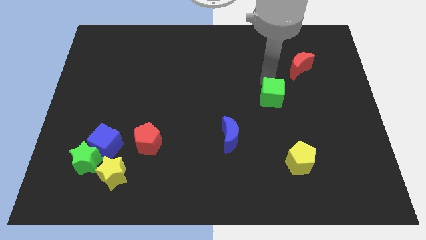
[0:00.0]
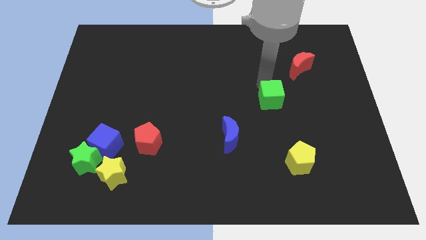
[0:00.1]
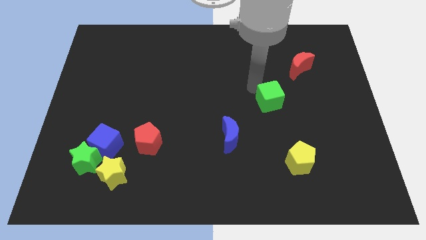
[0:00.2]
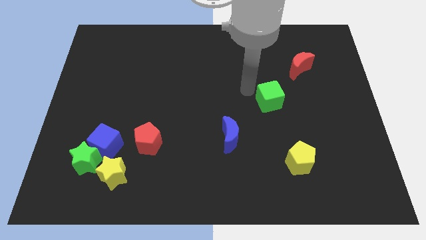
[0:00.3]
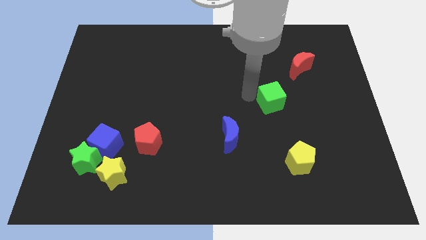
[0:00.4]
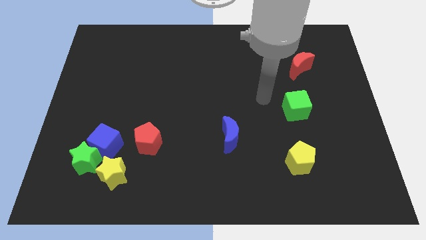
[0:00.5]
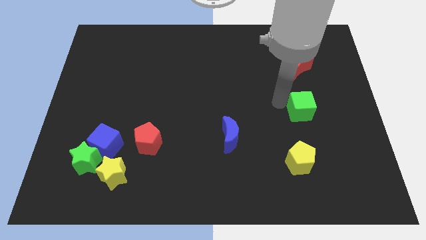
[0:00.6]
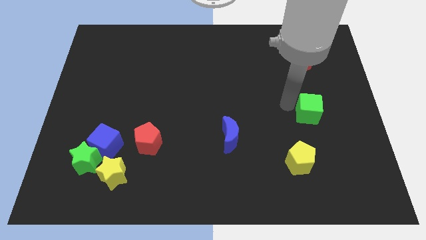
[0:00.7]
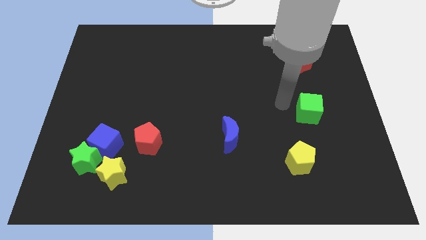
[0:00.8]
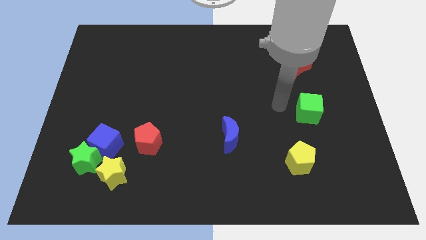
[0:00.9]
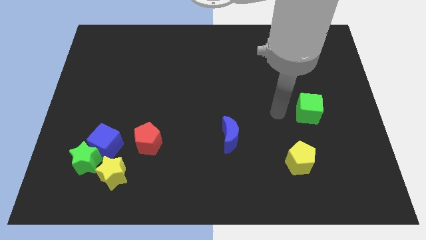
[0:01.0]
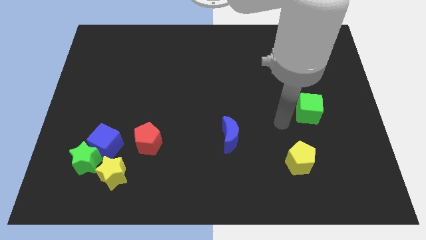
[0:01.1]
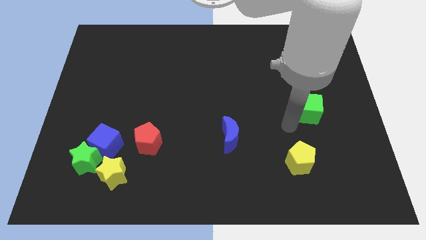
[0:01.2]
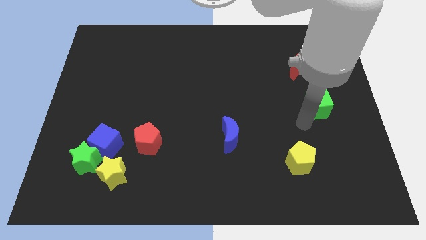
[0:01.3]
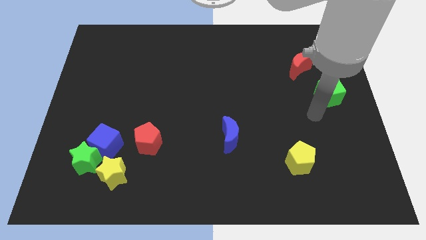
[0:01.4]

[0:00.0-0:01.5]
move the green cube below the red crescent

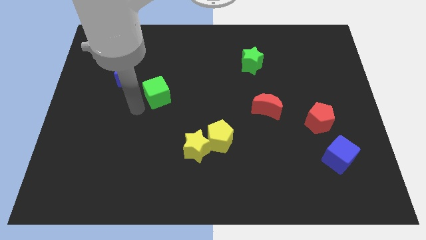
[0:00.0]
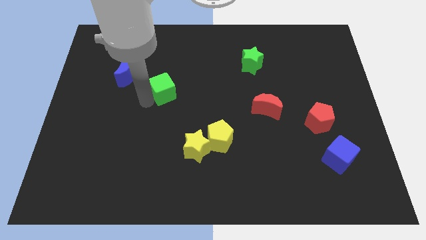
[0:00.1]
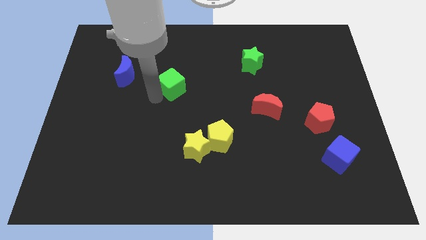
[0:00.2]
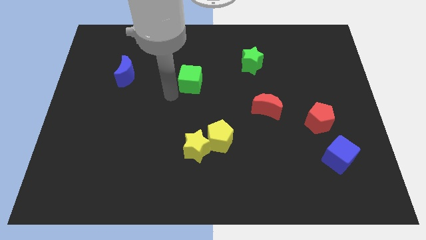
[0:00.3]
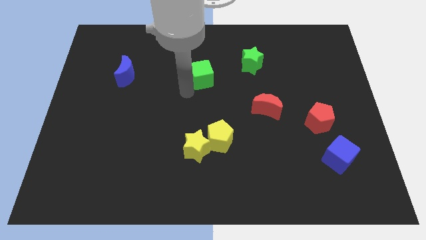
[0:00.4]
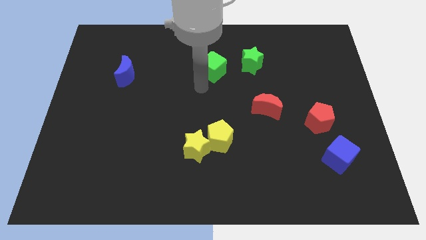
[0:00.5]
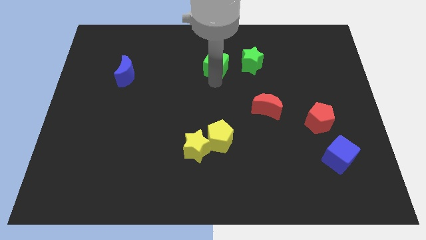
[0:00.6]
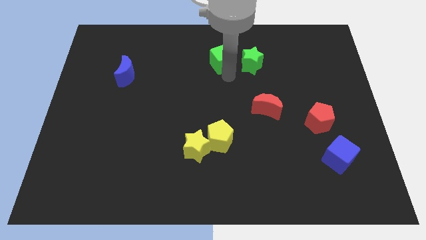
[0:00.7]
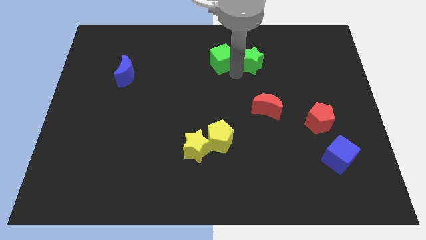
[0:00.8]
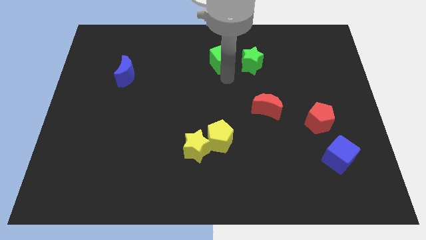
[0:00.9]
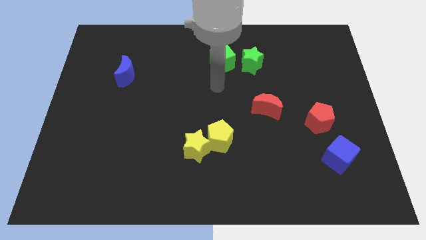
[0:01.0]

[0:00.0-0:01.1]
place green cube to the left of green star

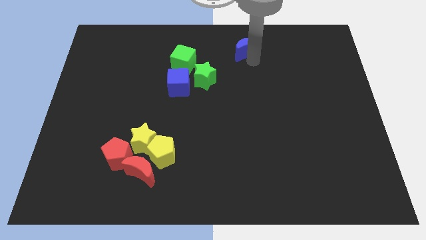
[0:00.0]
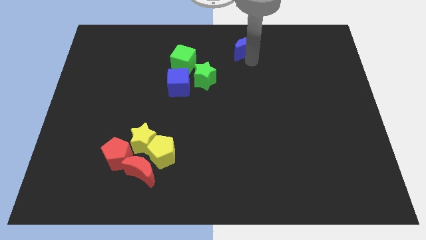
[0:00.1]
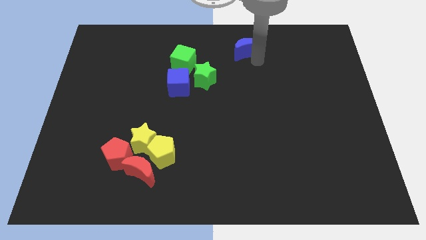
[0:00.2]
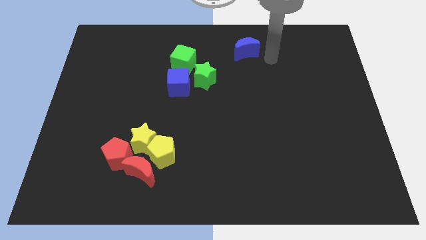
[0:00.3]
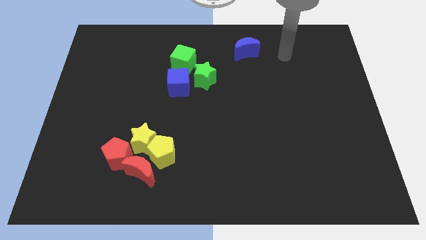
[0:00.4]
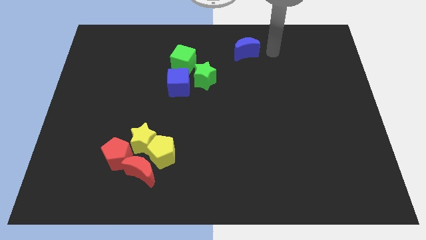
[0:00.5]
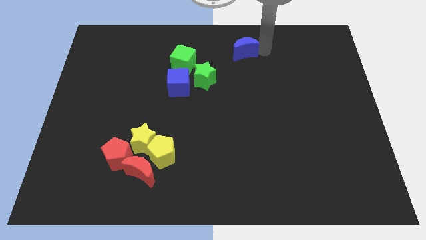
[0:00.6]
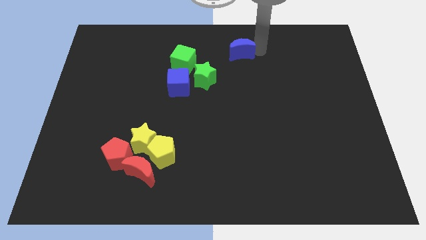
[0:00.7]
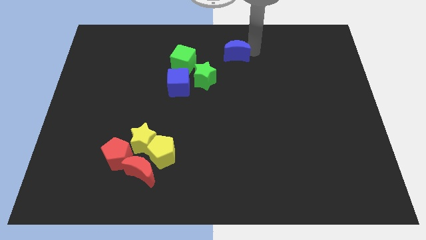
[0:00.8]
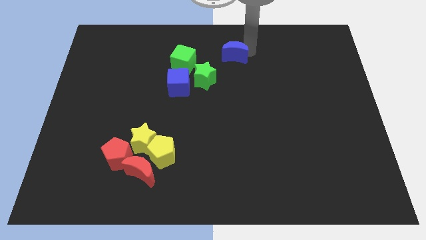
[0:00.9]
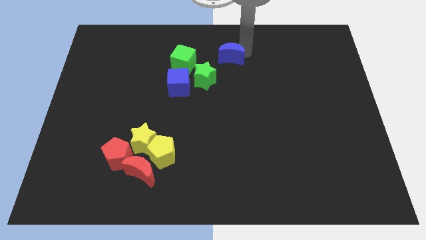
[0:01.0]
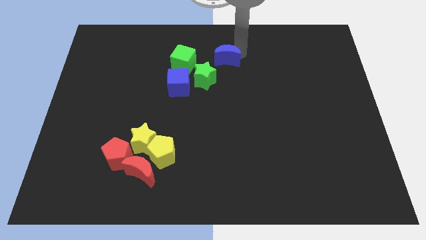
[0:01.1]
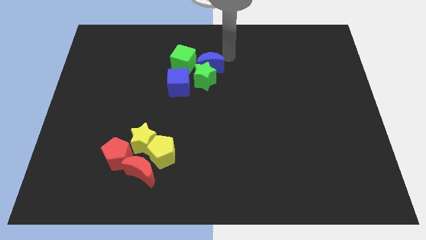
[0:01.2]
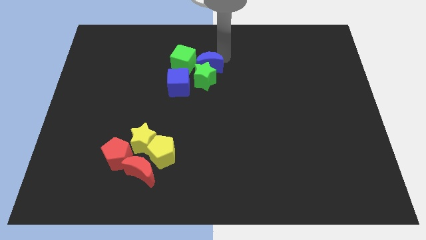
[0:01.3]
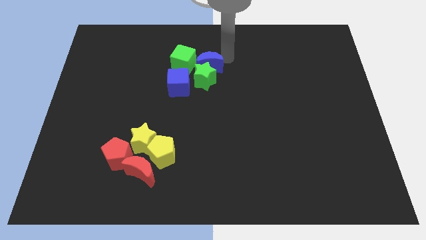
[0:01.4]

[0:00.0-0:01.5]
push the blue moon into the green star

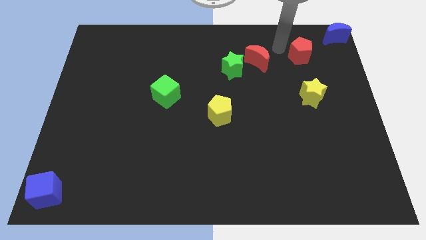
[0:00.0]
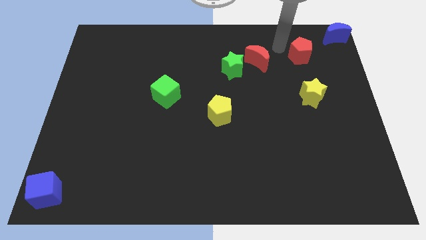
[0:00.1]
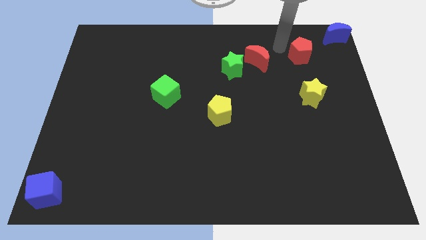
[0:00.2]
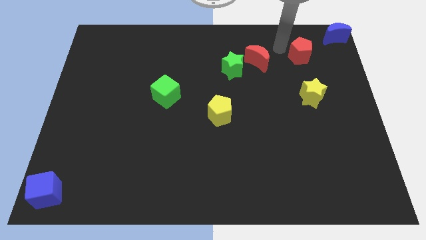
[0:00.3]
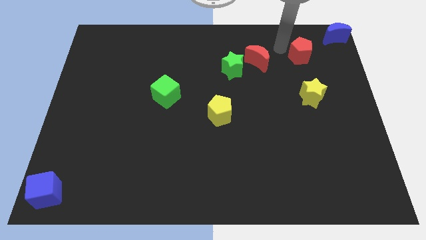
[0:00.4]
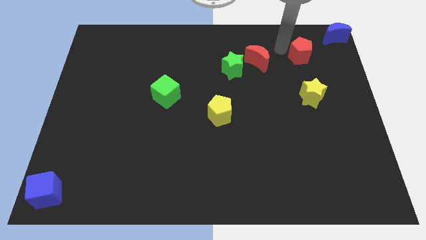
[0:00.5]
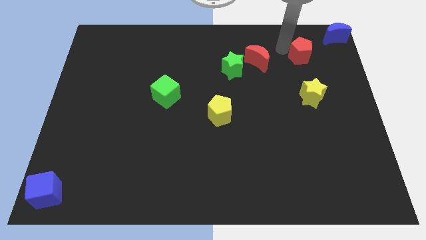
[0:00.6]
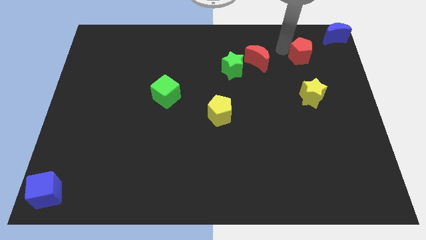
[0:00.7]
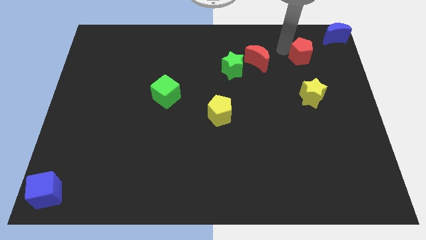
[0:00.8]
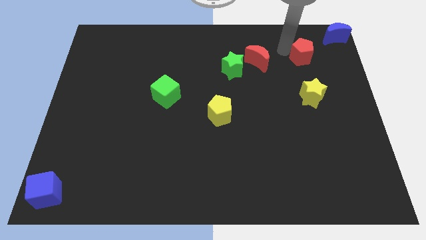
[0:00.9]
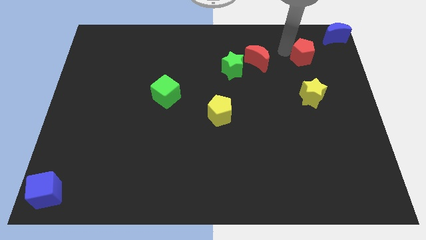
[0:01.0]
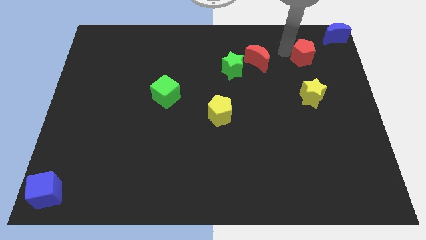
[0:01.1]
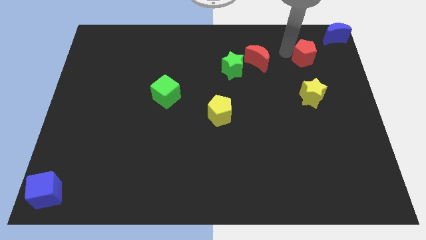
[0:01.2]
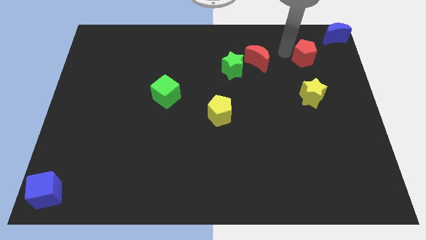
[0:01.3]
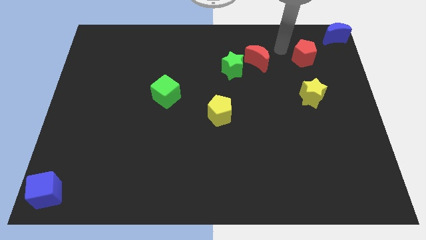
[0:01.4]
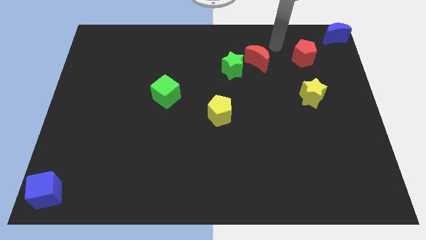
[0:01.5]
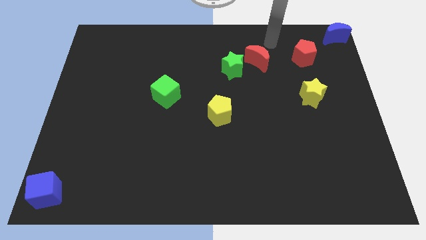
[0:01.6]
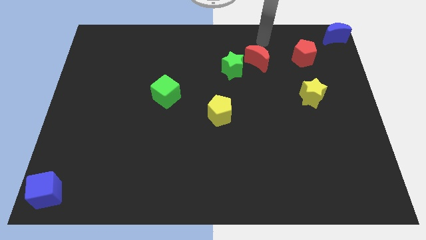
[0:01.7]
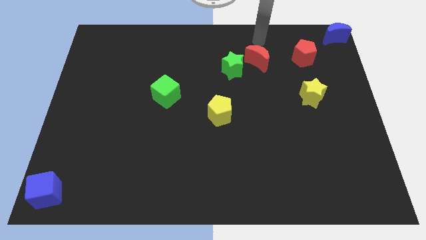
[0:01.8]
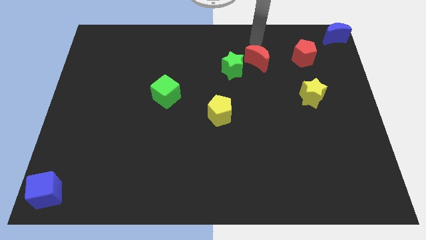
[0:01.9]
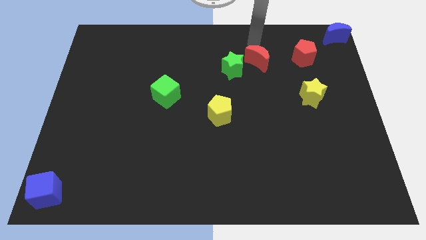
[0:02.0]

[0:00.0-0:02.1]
slightly move red pentagon near to the red moon

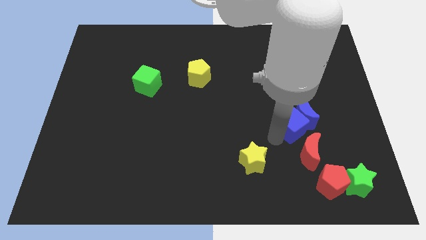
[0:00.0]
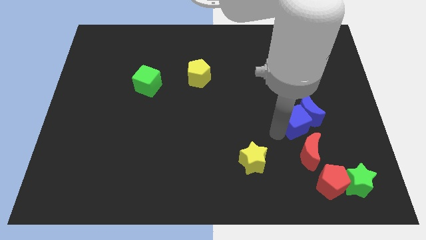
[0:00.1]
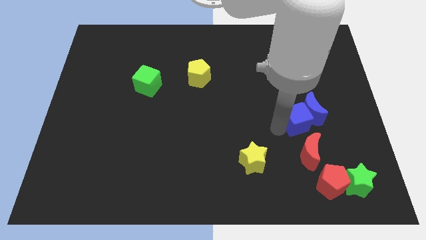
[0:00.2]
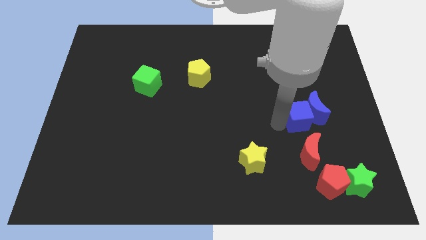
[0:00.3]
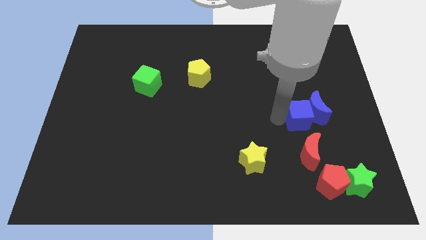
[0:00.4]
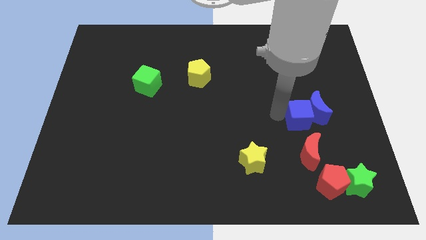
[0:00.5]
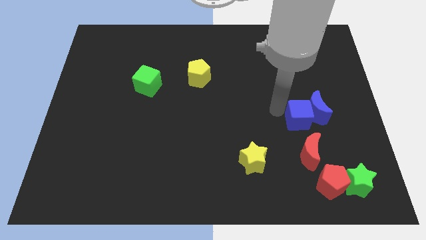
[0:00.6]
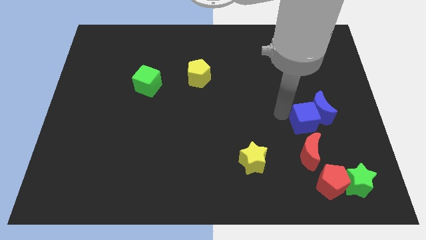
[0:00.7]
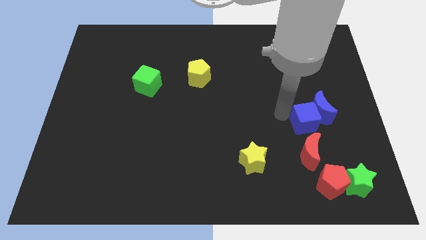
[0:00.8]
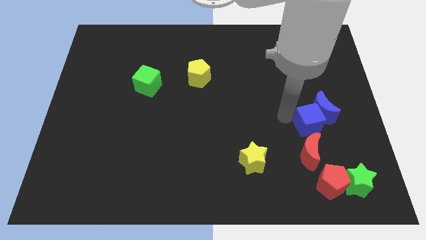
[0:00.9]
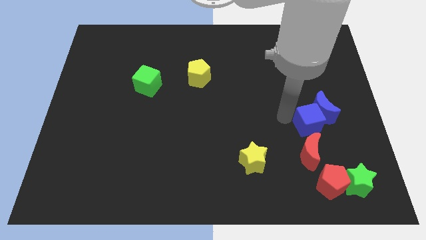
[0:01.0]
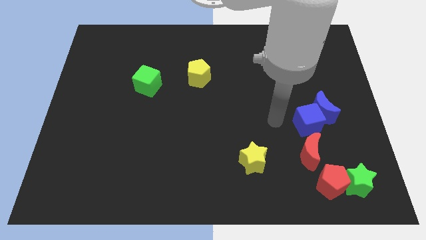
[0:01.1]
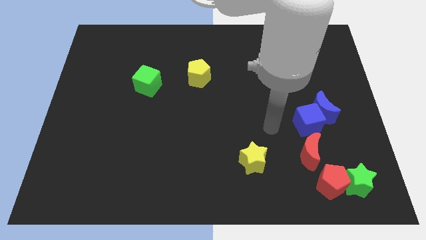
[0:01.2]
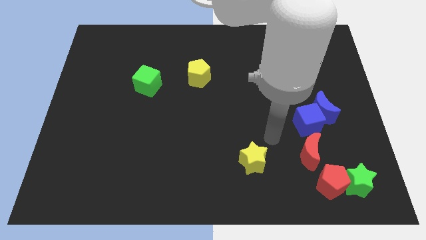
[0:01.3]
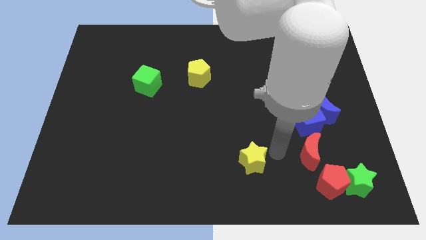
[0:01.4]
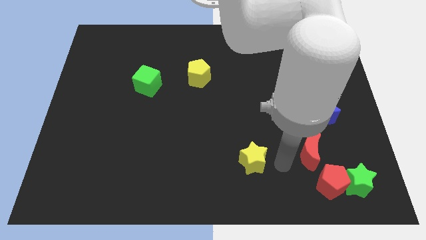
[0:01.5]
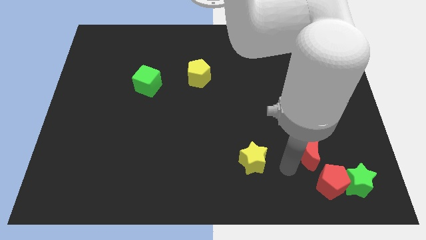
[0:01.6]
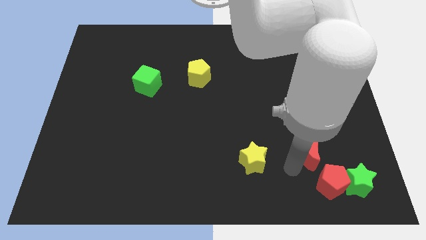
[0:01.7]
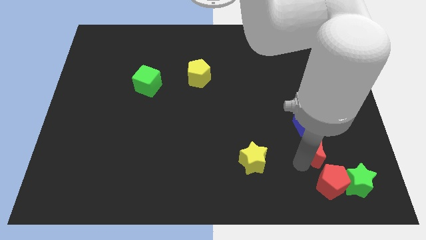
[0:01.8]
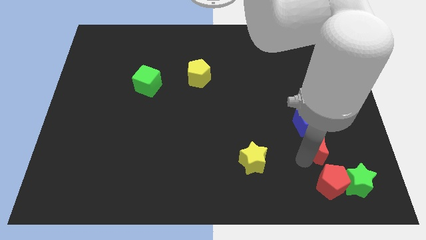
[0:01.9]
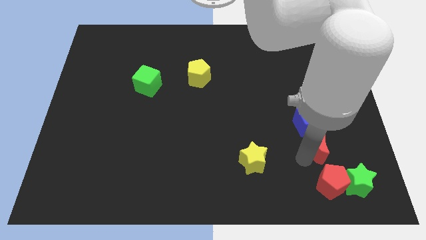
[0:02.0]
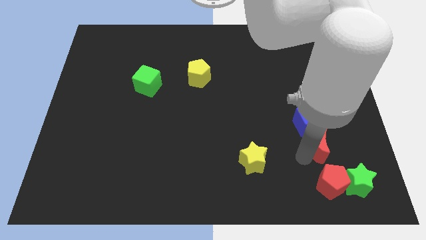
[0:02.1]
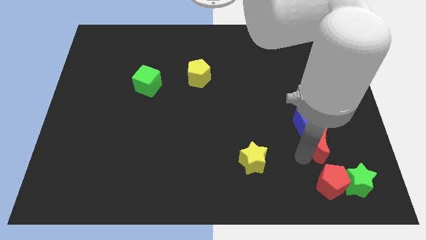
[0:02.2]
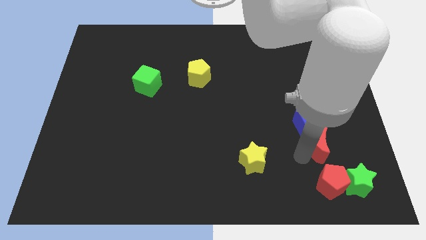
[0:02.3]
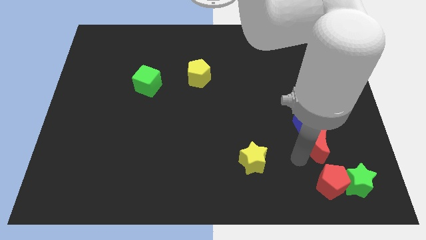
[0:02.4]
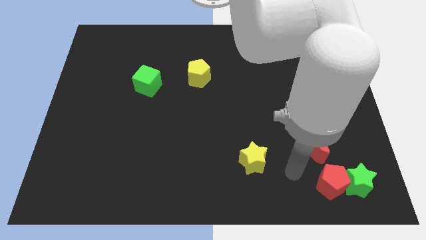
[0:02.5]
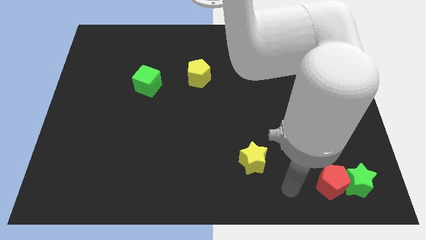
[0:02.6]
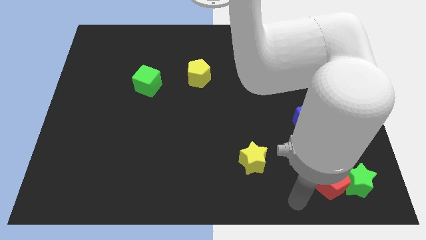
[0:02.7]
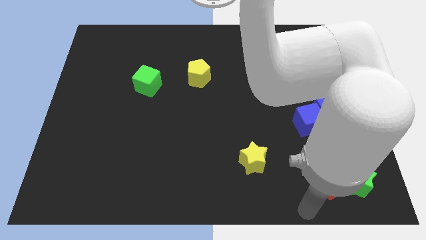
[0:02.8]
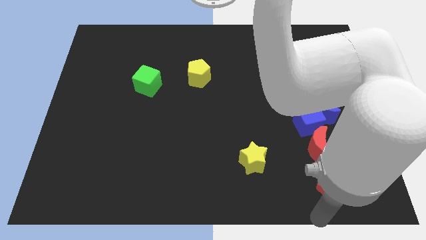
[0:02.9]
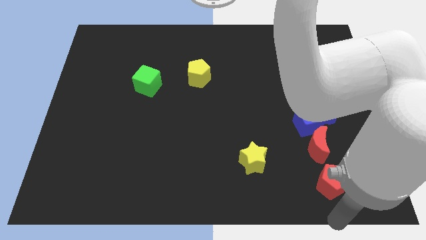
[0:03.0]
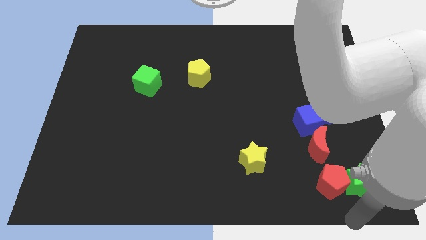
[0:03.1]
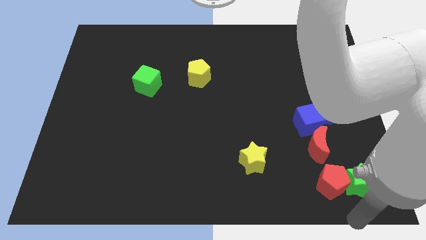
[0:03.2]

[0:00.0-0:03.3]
move the arm towards the bottom side of the green star
